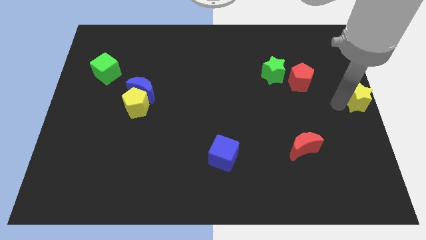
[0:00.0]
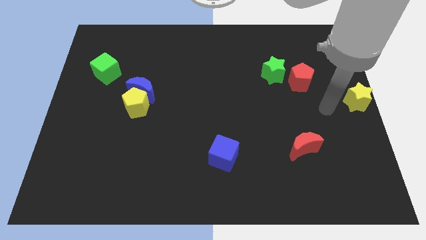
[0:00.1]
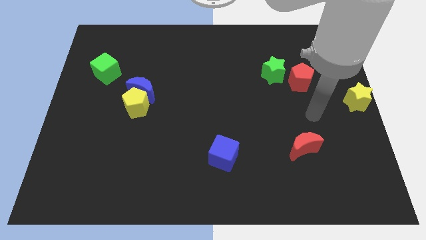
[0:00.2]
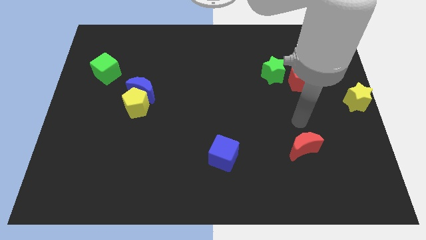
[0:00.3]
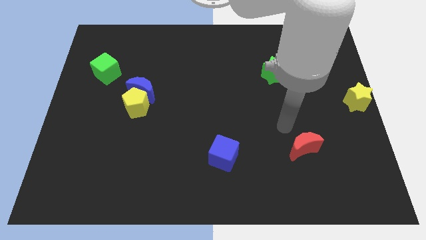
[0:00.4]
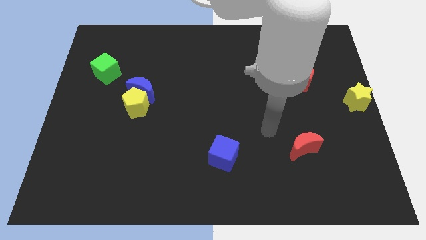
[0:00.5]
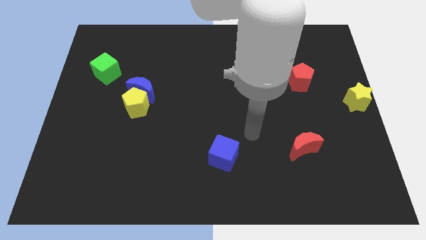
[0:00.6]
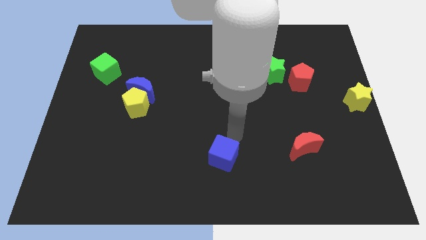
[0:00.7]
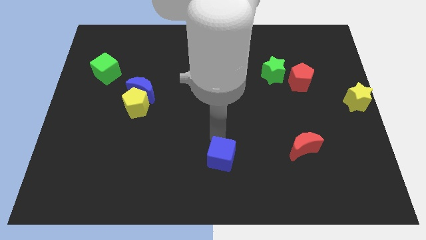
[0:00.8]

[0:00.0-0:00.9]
move your arm to the top of blue cube

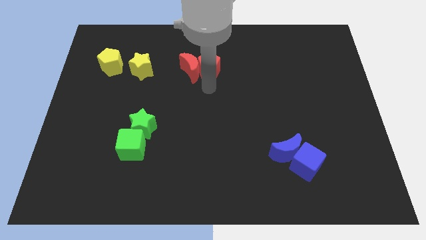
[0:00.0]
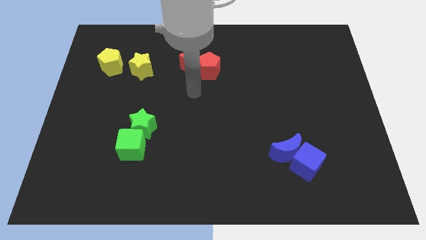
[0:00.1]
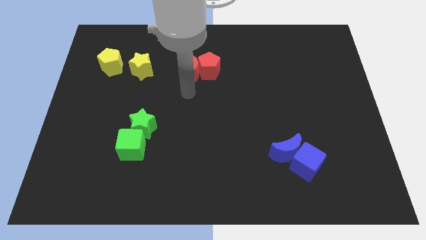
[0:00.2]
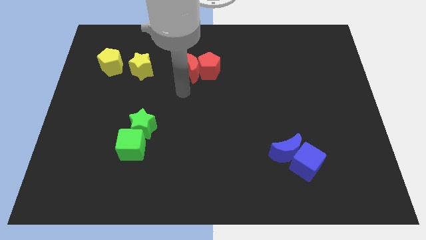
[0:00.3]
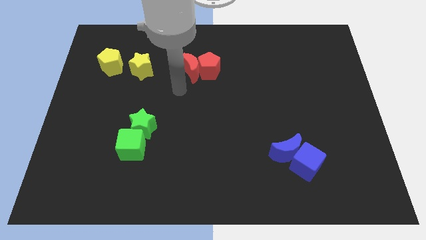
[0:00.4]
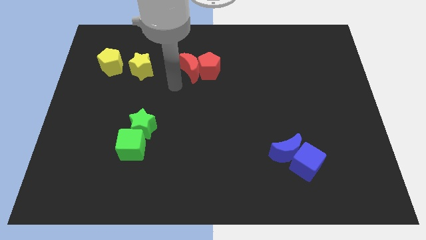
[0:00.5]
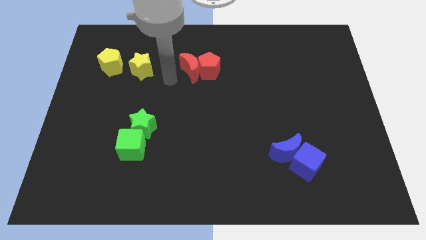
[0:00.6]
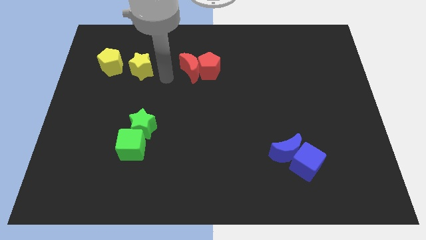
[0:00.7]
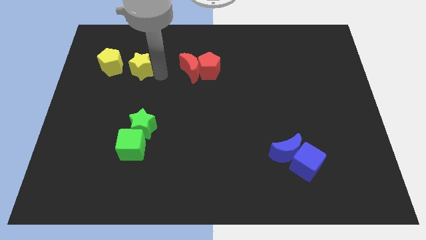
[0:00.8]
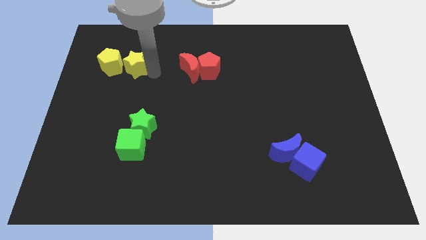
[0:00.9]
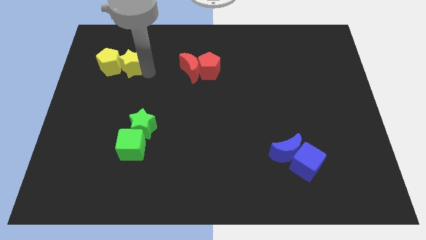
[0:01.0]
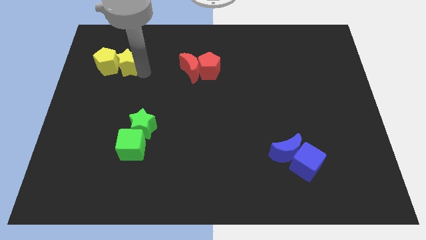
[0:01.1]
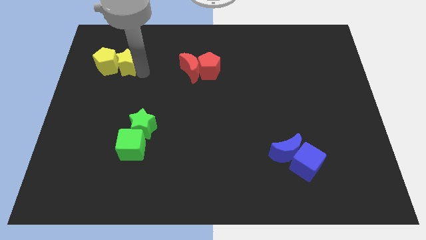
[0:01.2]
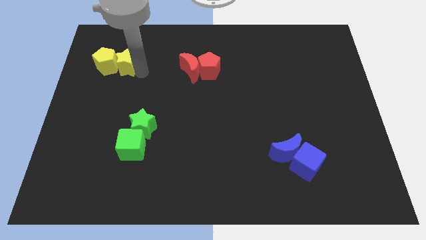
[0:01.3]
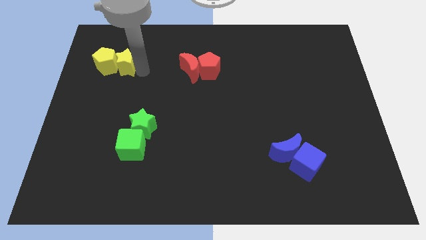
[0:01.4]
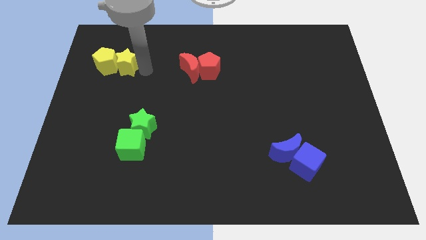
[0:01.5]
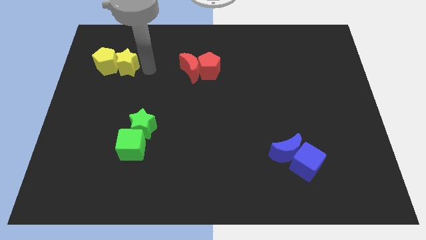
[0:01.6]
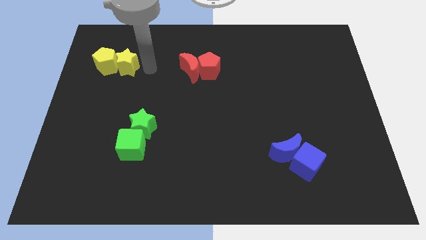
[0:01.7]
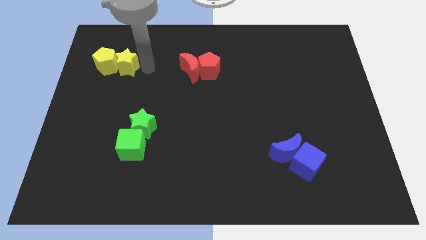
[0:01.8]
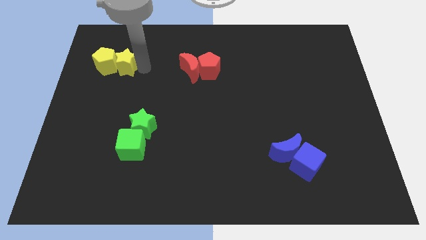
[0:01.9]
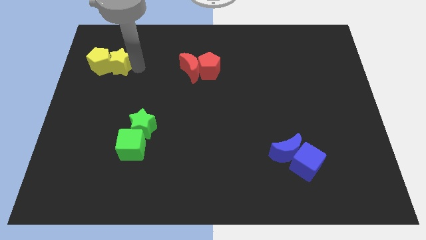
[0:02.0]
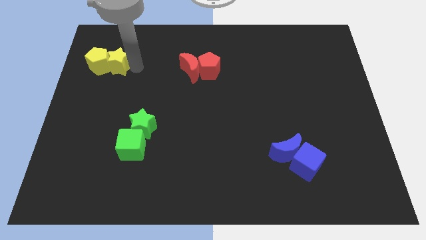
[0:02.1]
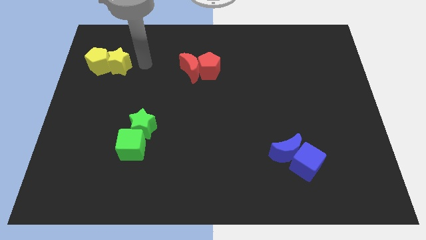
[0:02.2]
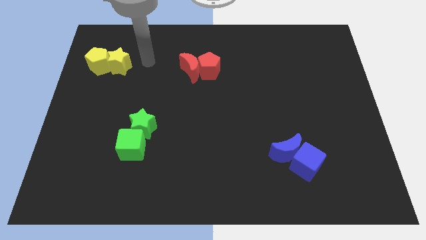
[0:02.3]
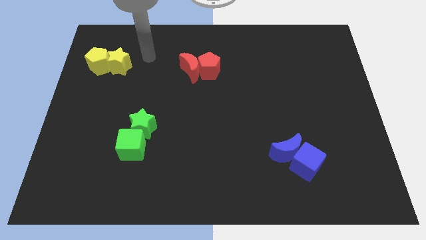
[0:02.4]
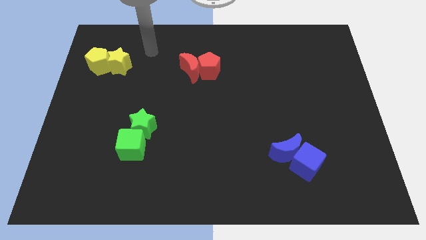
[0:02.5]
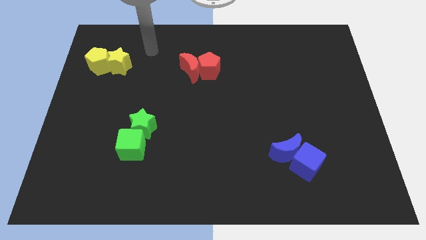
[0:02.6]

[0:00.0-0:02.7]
push the yellow star into the yellow pentagon

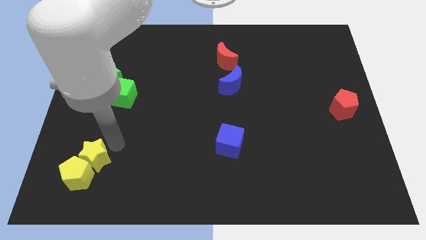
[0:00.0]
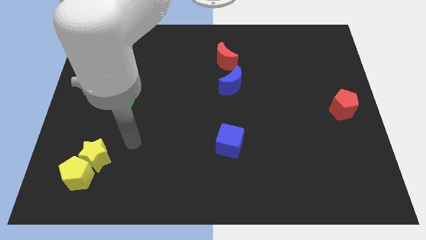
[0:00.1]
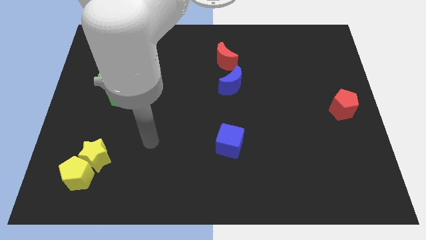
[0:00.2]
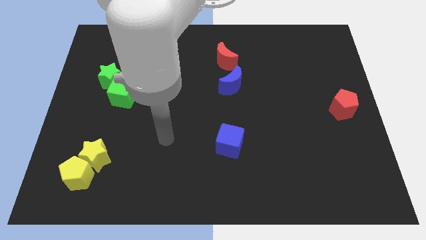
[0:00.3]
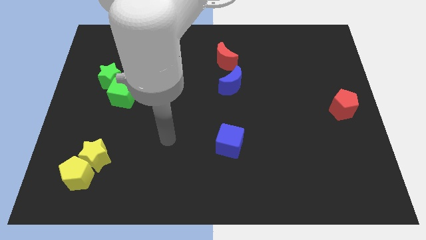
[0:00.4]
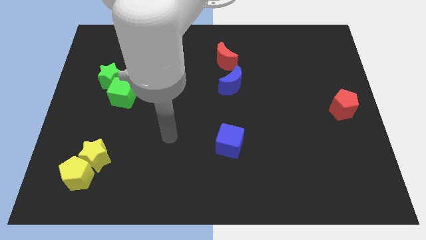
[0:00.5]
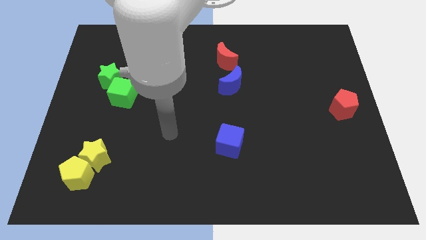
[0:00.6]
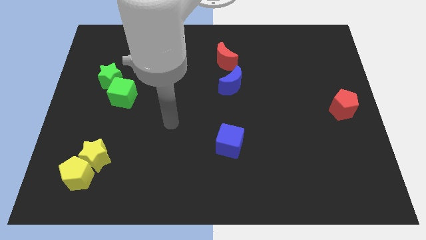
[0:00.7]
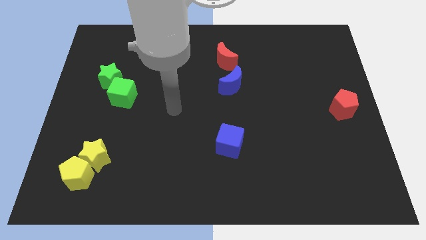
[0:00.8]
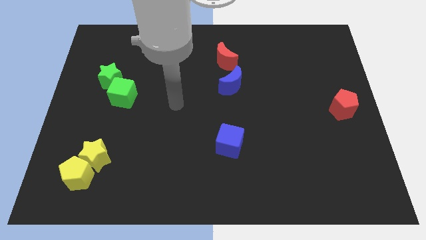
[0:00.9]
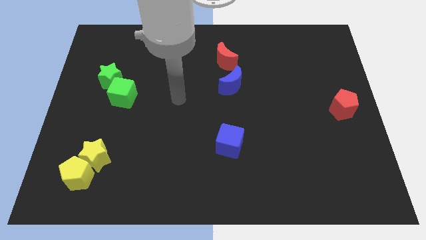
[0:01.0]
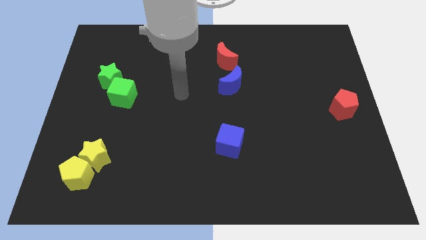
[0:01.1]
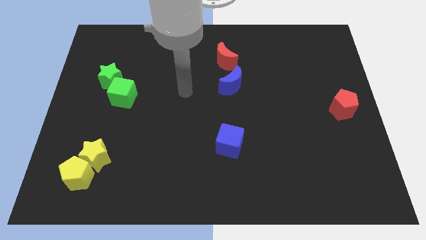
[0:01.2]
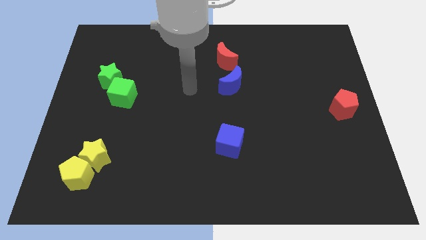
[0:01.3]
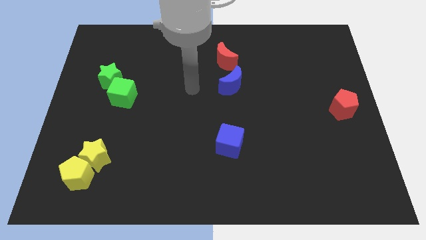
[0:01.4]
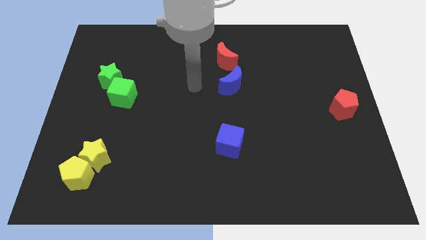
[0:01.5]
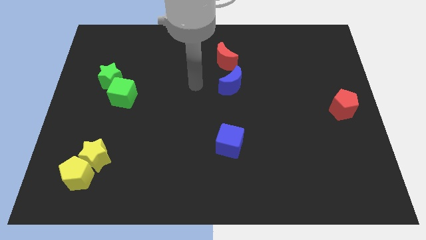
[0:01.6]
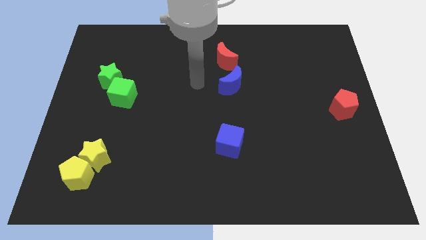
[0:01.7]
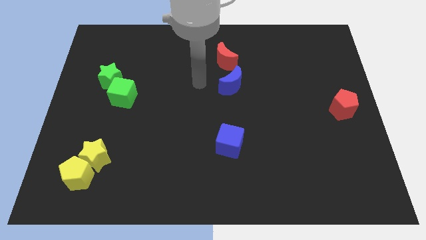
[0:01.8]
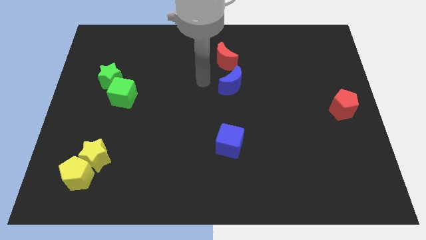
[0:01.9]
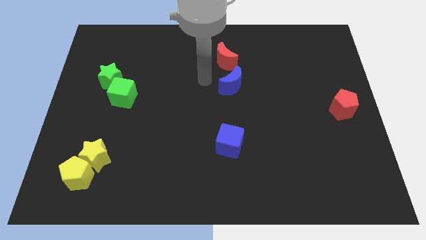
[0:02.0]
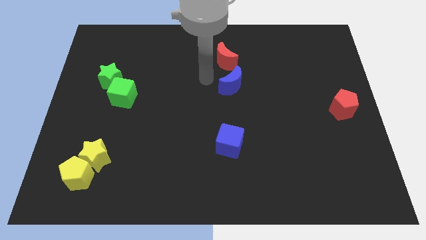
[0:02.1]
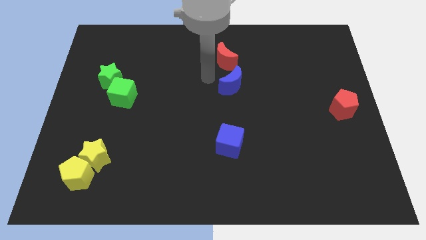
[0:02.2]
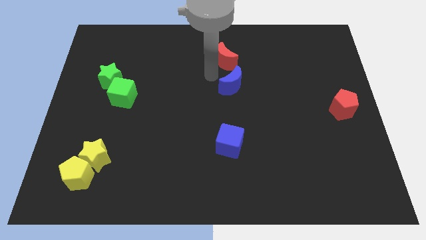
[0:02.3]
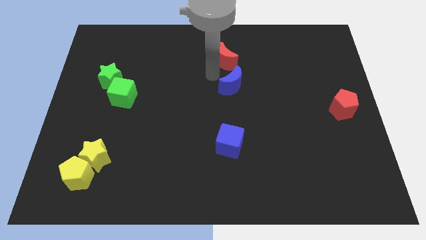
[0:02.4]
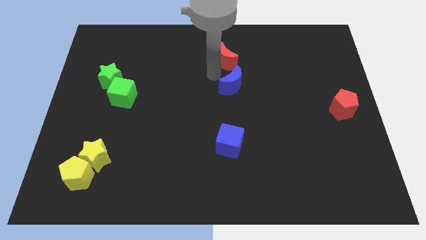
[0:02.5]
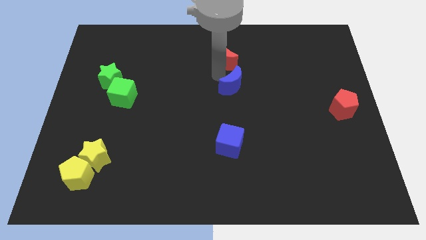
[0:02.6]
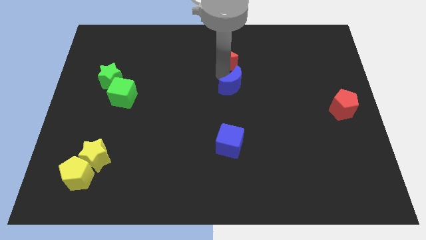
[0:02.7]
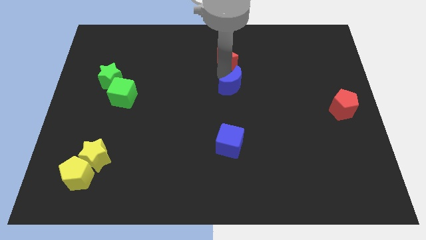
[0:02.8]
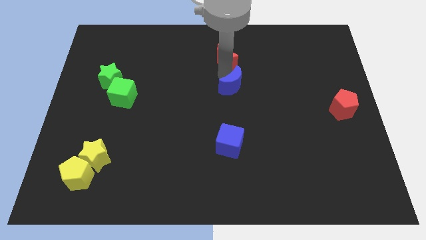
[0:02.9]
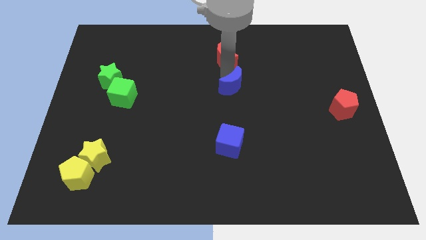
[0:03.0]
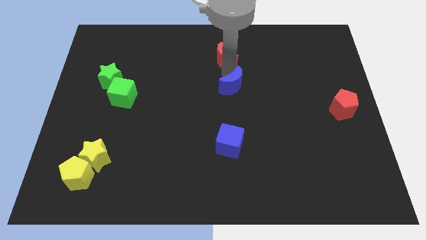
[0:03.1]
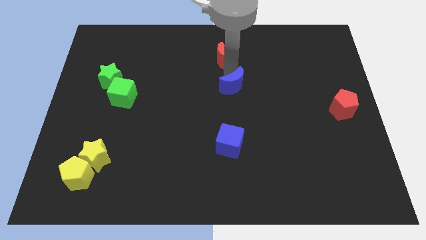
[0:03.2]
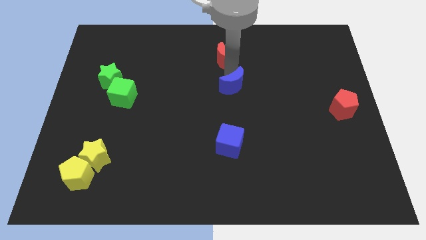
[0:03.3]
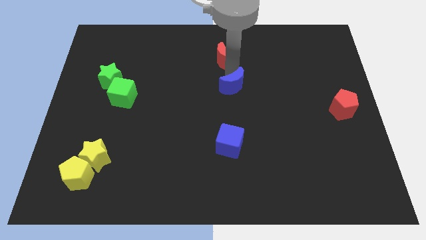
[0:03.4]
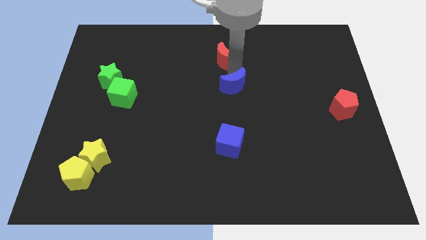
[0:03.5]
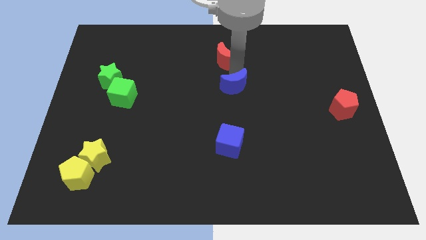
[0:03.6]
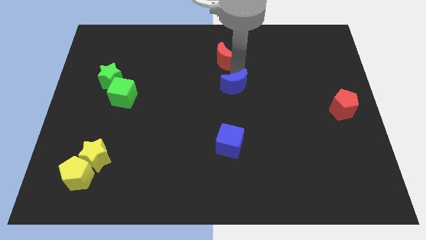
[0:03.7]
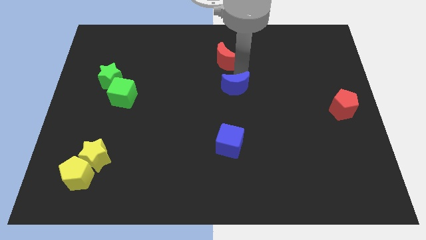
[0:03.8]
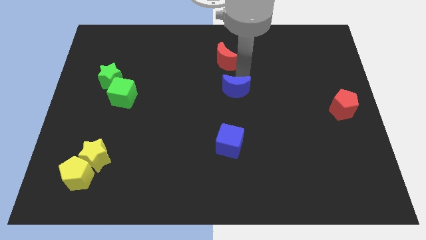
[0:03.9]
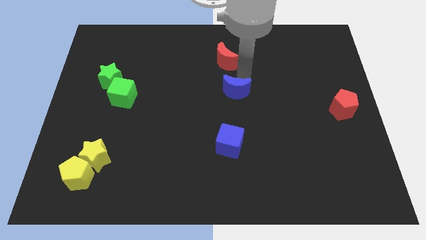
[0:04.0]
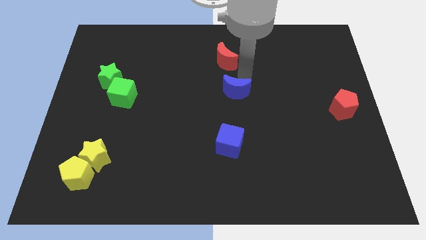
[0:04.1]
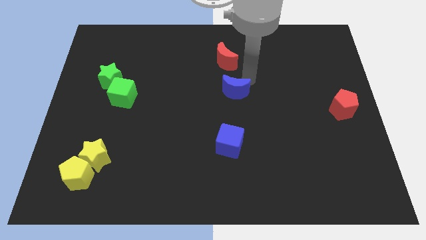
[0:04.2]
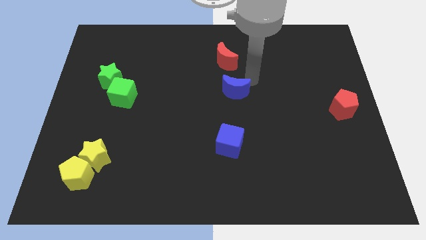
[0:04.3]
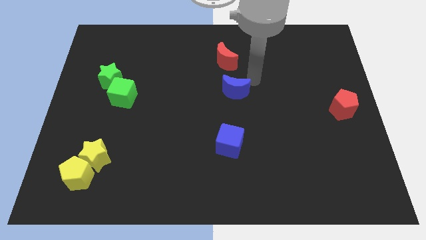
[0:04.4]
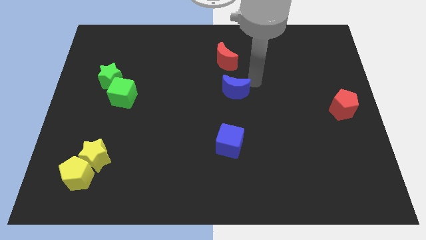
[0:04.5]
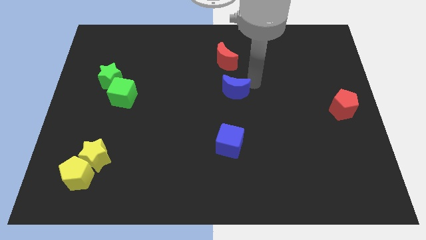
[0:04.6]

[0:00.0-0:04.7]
put the blue moon vertically below the red moon

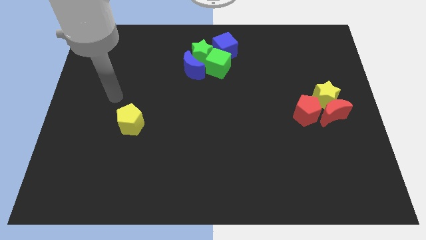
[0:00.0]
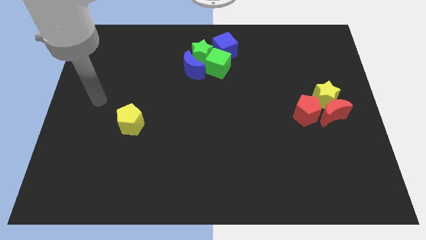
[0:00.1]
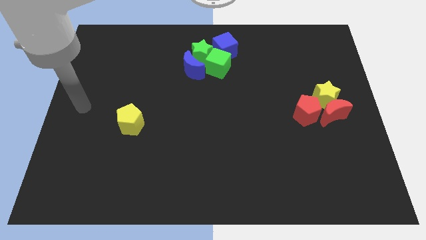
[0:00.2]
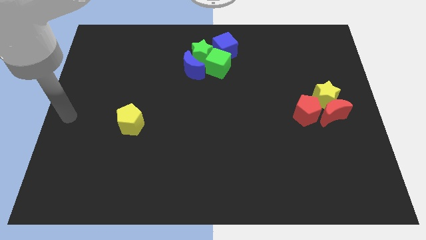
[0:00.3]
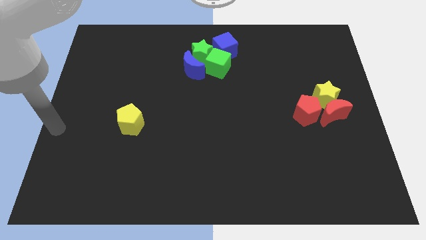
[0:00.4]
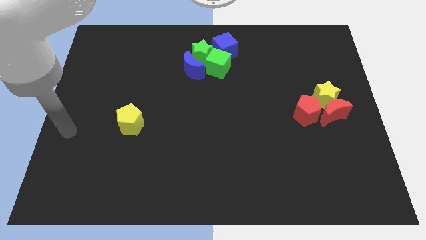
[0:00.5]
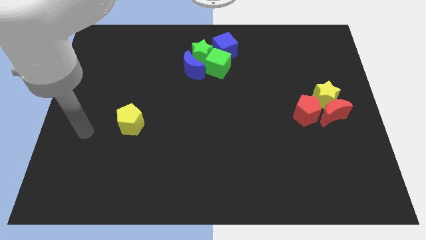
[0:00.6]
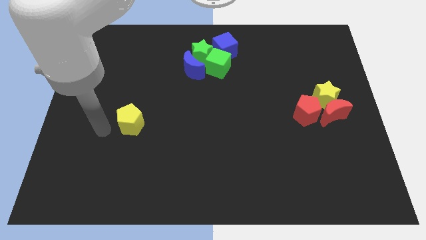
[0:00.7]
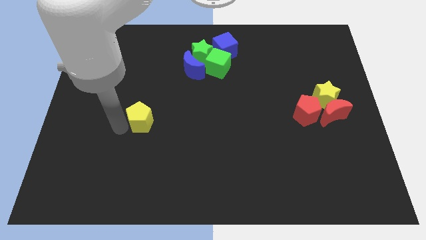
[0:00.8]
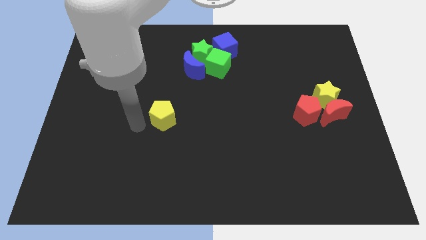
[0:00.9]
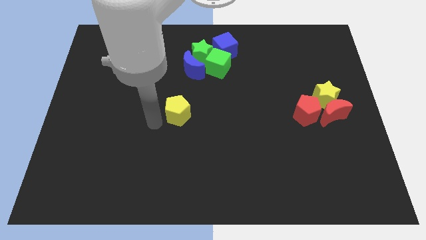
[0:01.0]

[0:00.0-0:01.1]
push yellow pentagon towards center
